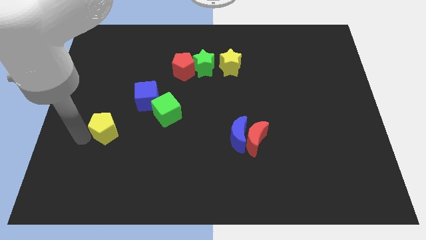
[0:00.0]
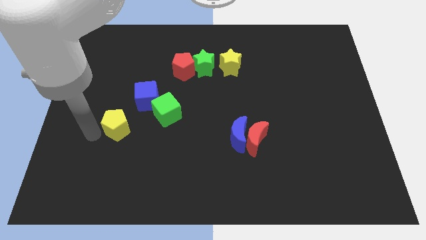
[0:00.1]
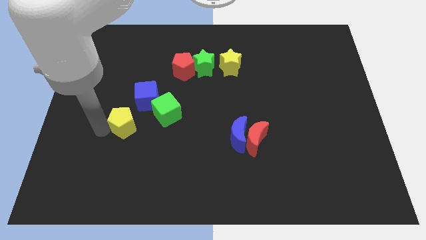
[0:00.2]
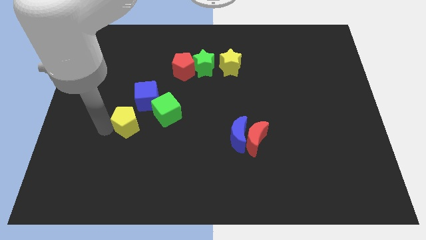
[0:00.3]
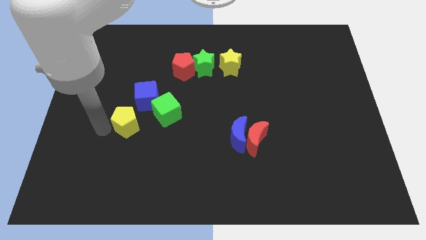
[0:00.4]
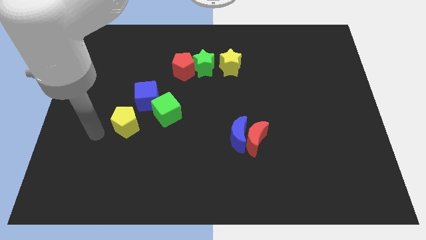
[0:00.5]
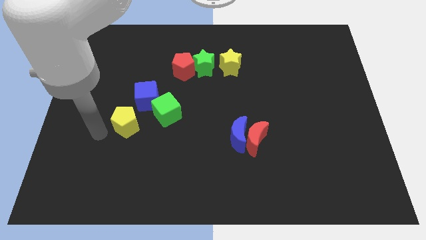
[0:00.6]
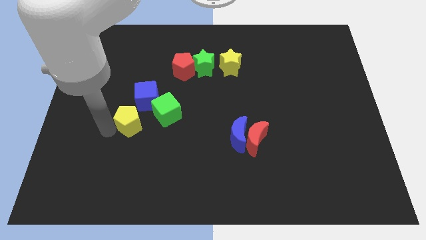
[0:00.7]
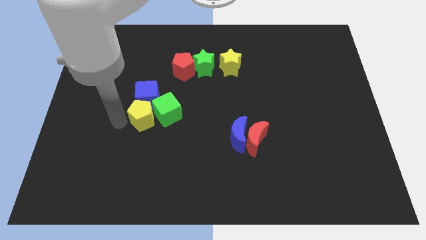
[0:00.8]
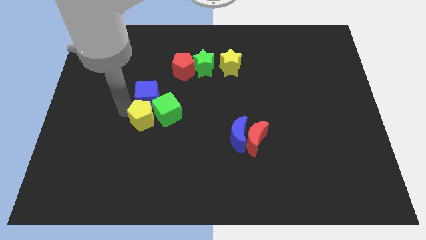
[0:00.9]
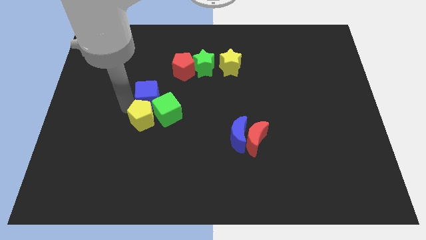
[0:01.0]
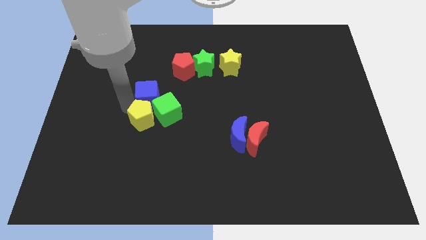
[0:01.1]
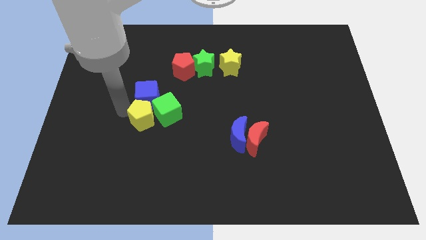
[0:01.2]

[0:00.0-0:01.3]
push yellow pentagon into green and blue blocks

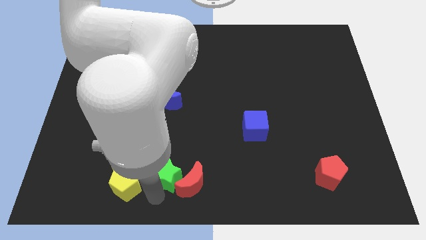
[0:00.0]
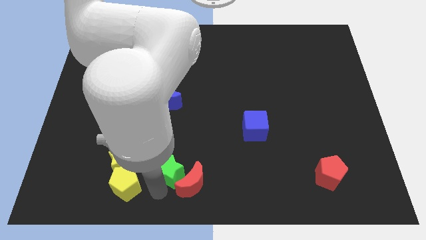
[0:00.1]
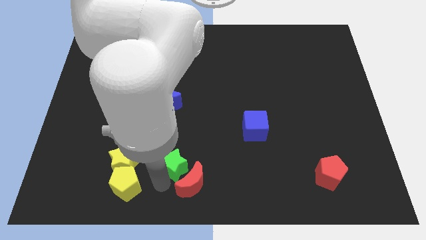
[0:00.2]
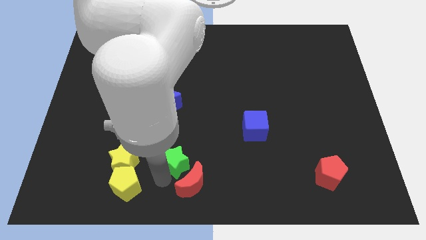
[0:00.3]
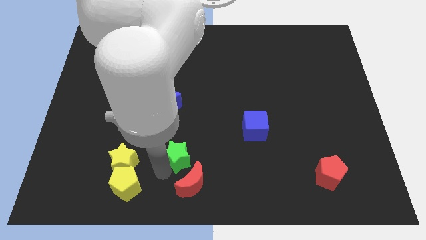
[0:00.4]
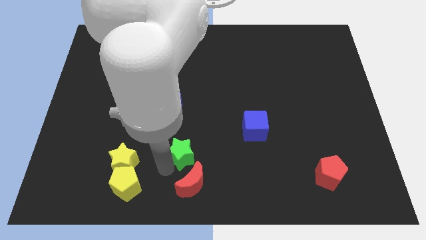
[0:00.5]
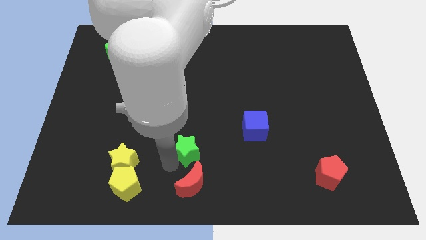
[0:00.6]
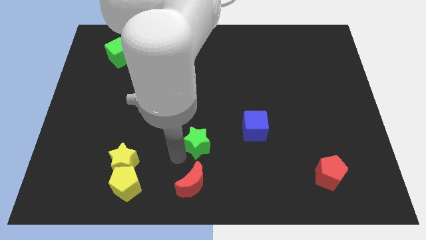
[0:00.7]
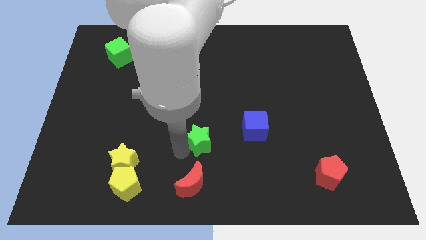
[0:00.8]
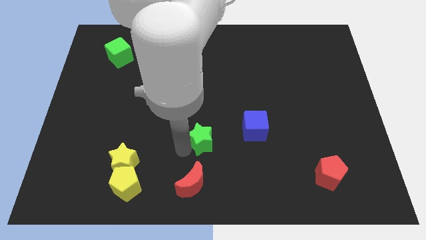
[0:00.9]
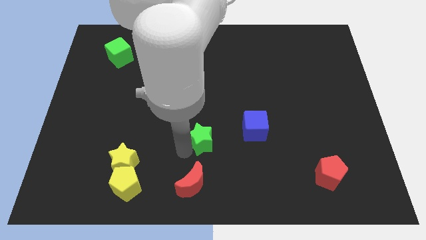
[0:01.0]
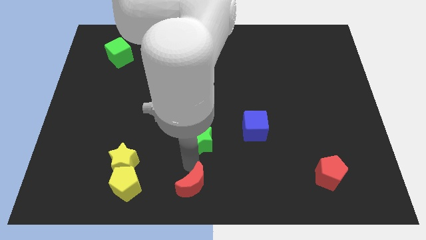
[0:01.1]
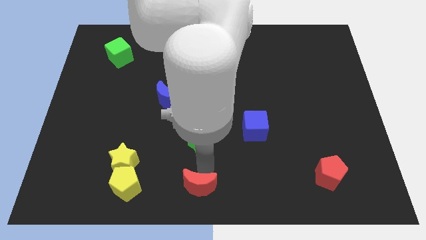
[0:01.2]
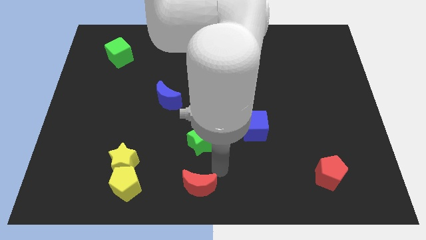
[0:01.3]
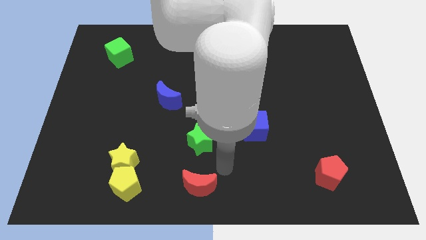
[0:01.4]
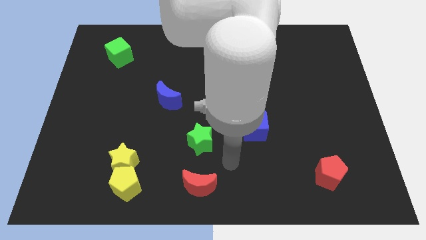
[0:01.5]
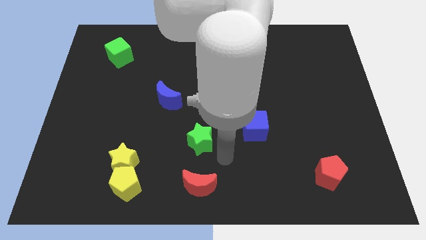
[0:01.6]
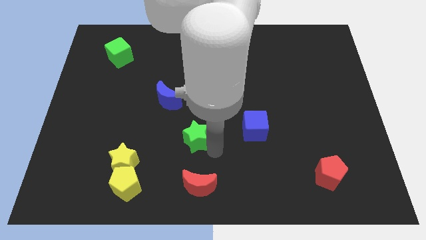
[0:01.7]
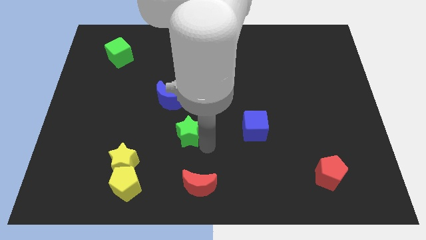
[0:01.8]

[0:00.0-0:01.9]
move the green star away from the red moon

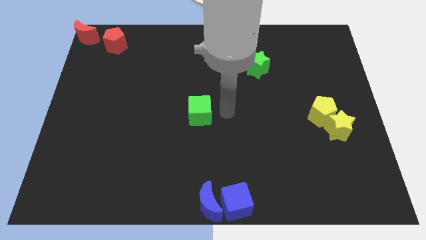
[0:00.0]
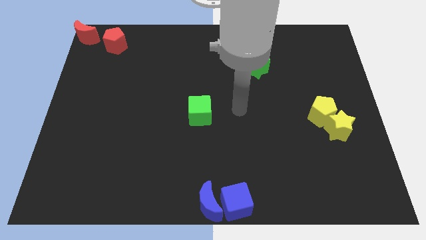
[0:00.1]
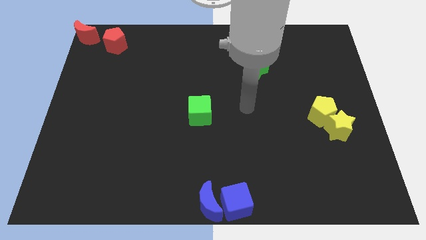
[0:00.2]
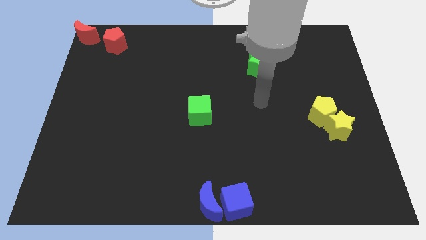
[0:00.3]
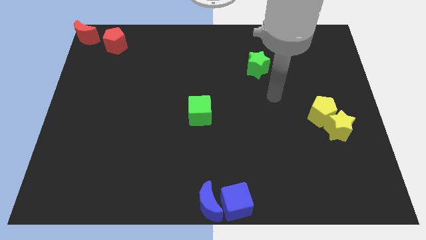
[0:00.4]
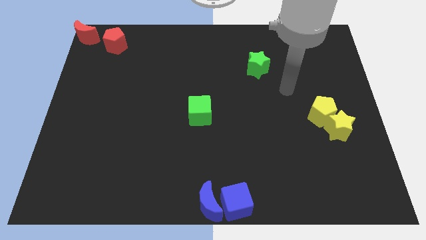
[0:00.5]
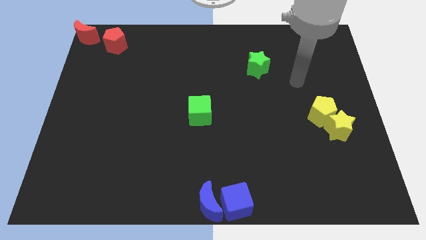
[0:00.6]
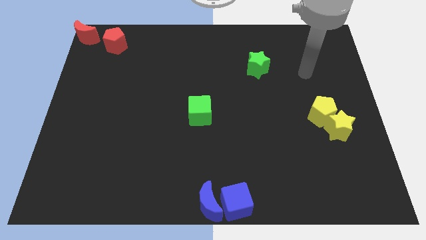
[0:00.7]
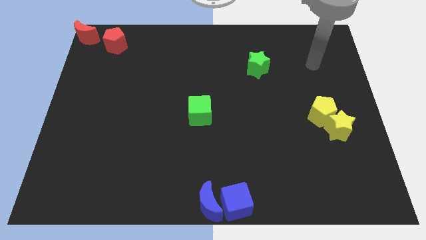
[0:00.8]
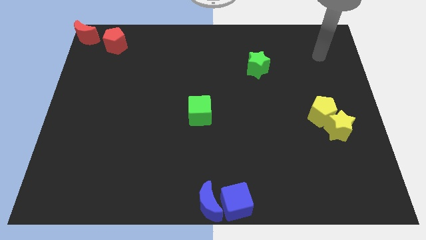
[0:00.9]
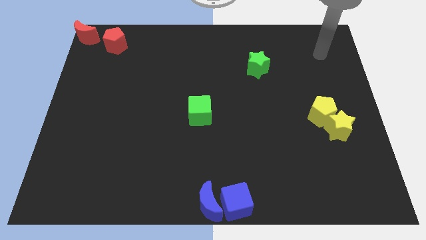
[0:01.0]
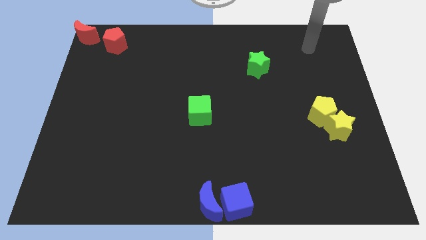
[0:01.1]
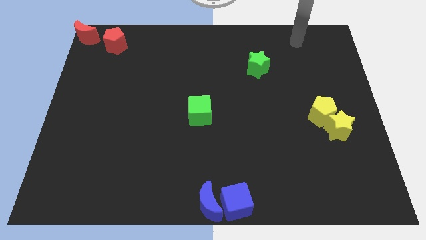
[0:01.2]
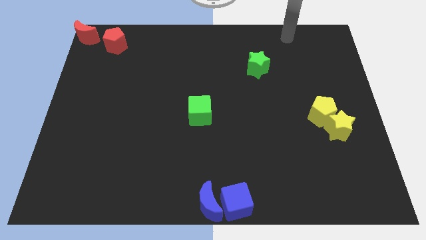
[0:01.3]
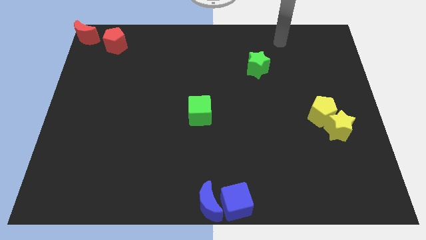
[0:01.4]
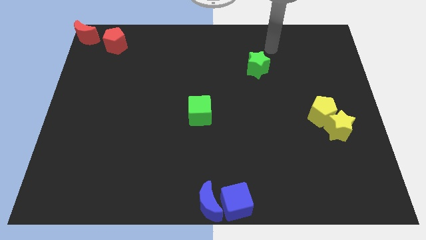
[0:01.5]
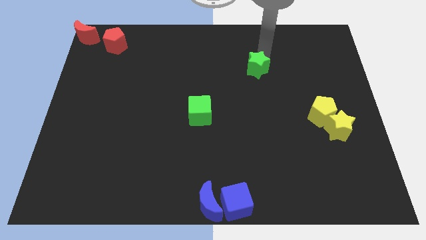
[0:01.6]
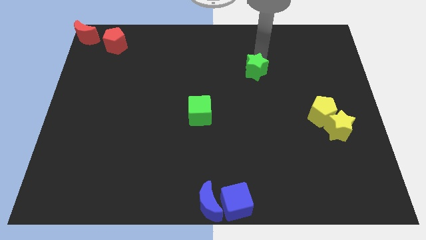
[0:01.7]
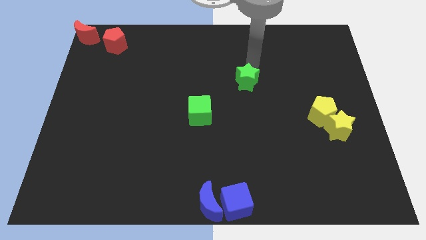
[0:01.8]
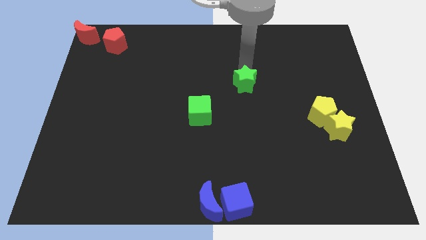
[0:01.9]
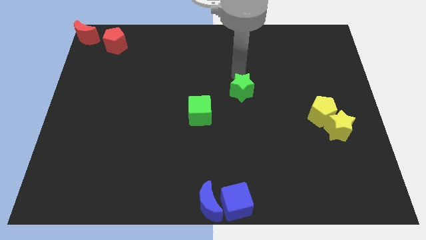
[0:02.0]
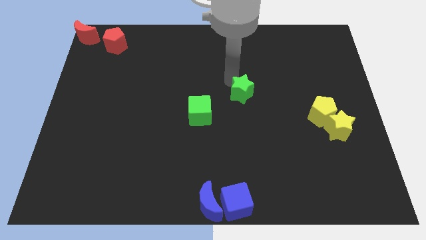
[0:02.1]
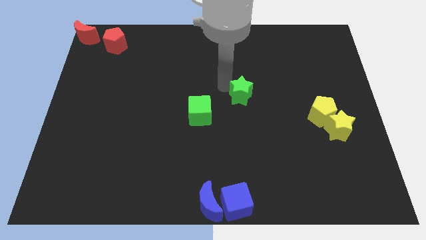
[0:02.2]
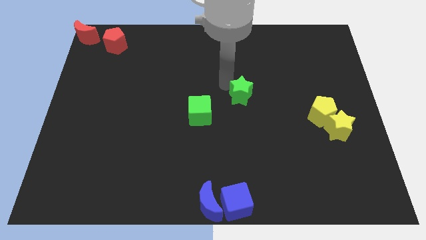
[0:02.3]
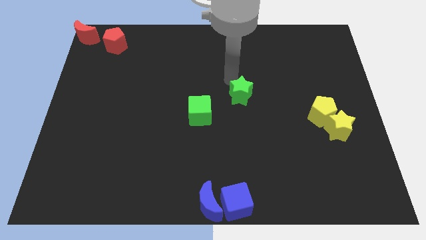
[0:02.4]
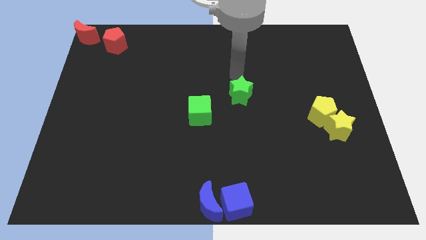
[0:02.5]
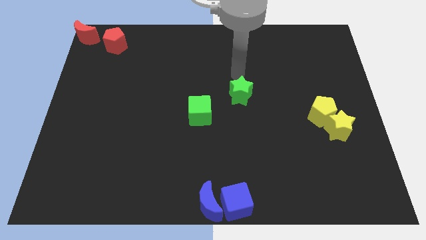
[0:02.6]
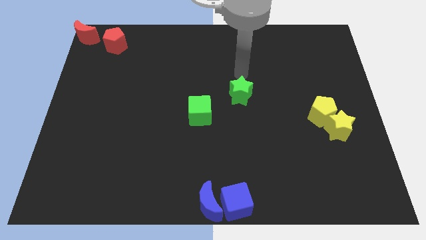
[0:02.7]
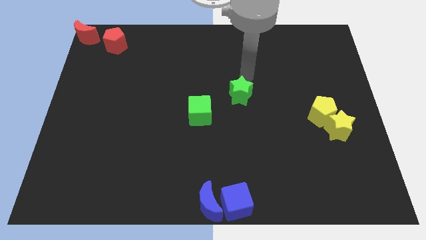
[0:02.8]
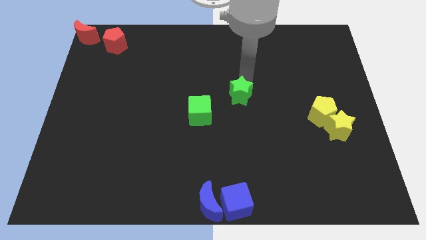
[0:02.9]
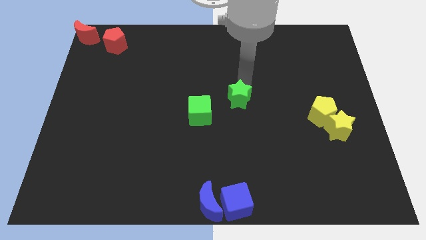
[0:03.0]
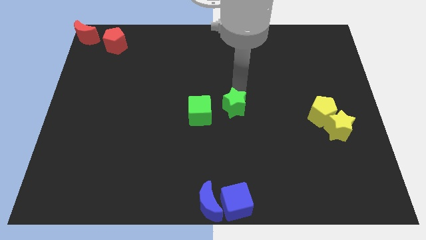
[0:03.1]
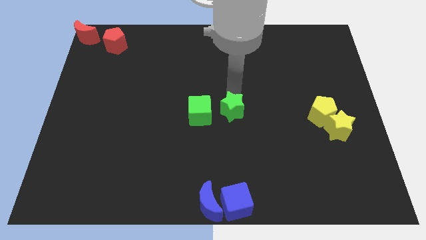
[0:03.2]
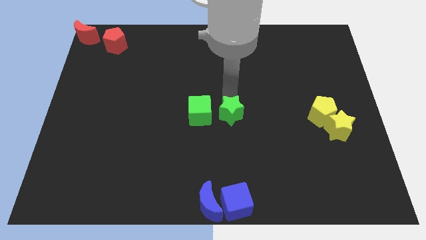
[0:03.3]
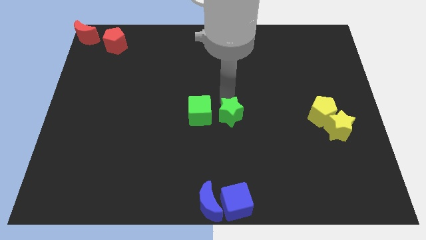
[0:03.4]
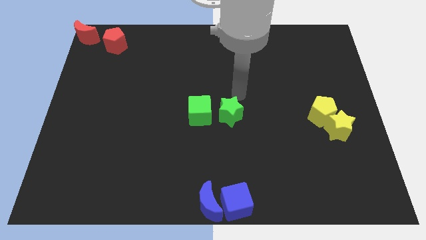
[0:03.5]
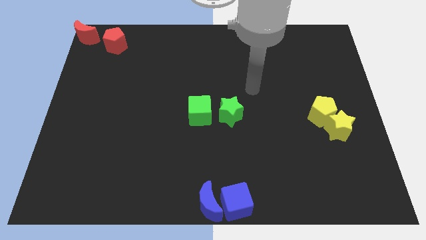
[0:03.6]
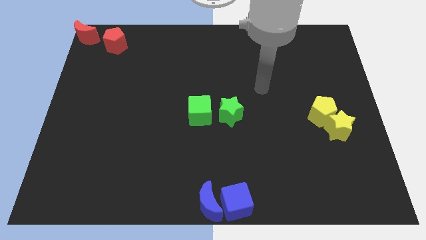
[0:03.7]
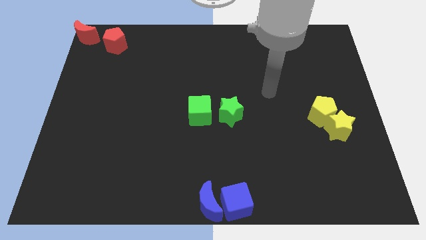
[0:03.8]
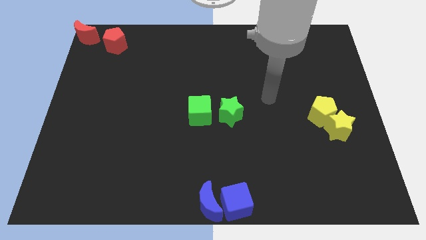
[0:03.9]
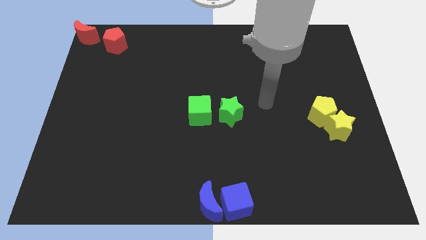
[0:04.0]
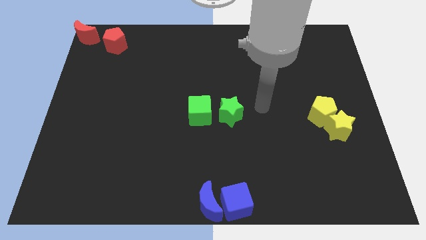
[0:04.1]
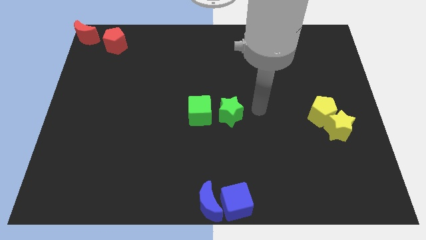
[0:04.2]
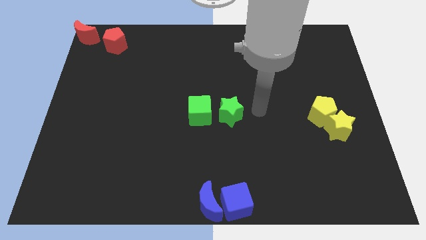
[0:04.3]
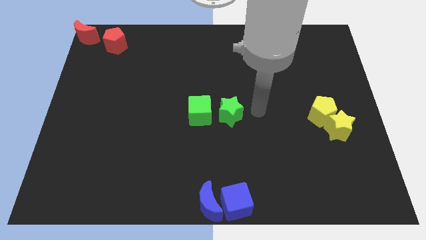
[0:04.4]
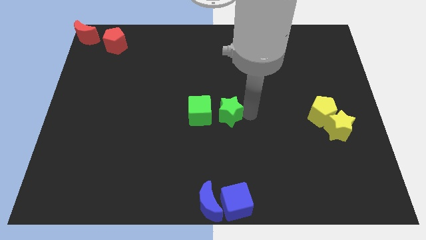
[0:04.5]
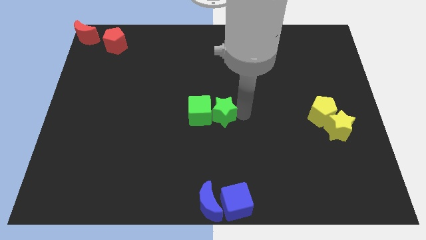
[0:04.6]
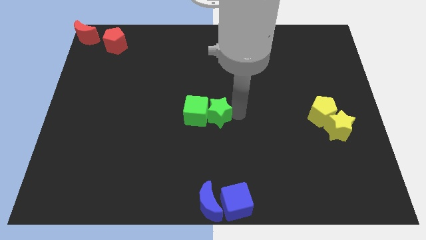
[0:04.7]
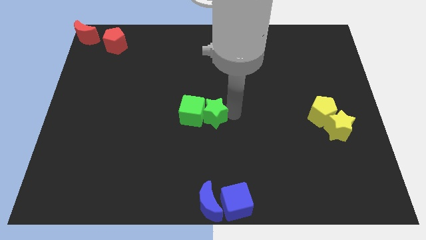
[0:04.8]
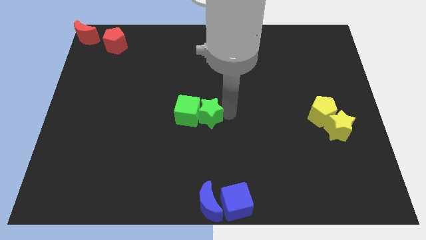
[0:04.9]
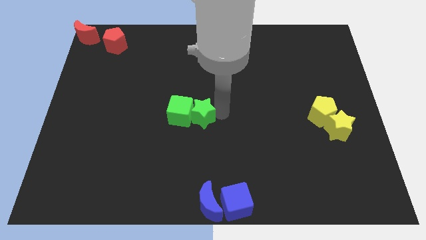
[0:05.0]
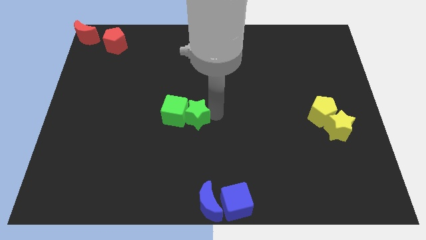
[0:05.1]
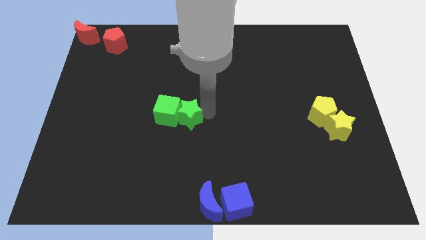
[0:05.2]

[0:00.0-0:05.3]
move the green star to the right of the green cube

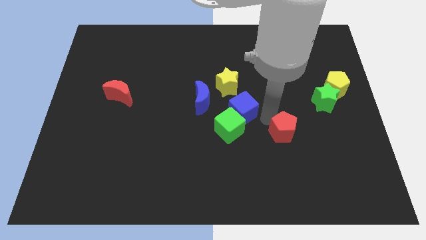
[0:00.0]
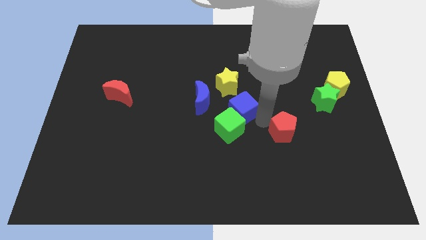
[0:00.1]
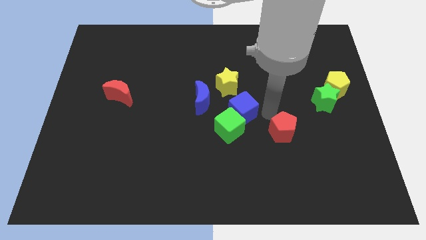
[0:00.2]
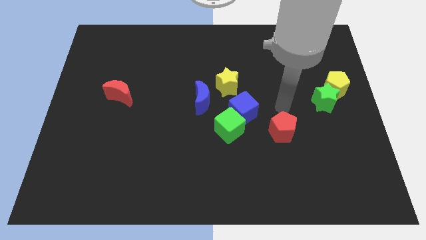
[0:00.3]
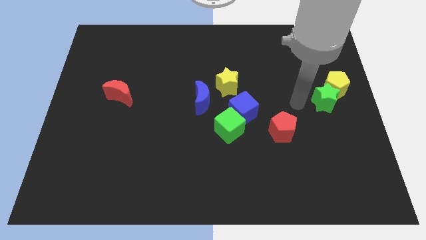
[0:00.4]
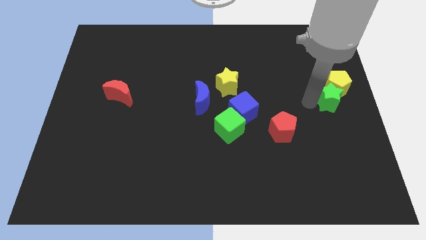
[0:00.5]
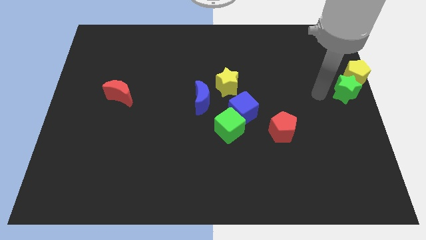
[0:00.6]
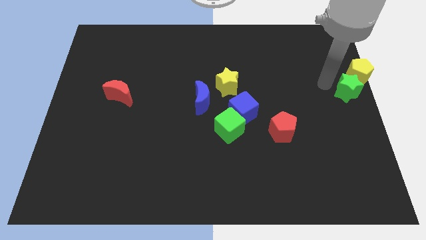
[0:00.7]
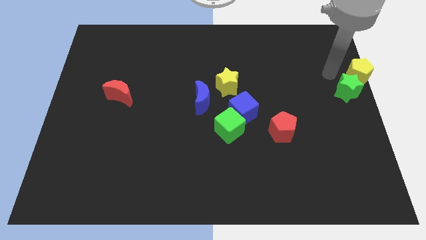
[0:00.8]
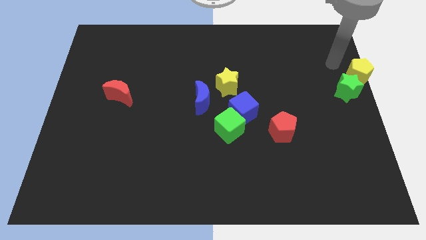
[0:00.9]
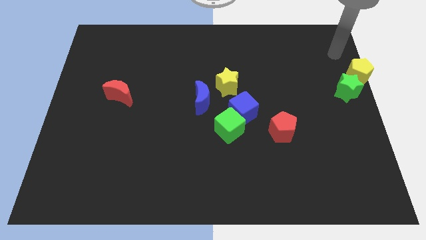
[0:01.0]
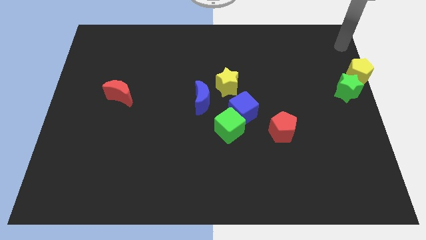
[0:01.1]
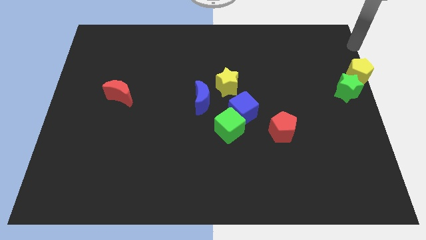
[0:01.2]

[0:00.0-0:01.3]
push the green star along with the yellow pentagon towards the right side of the board
